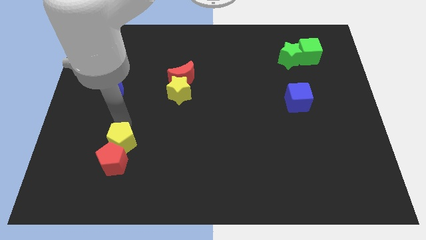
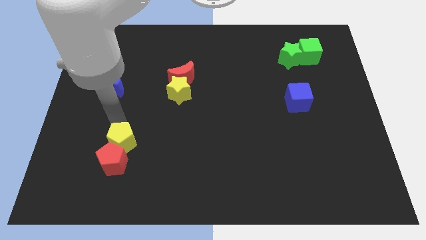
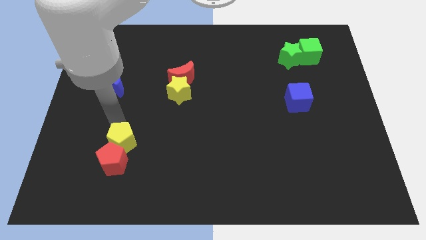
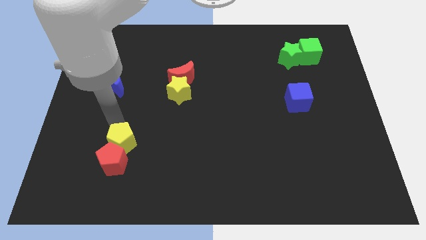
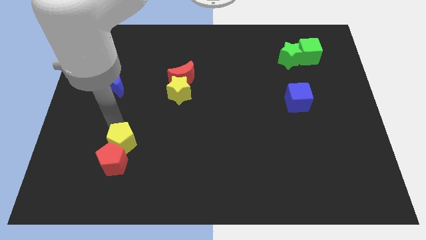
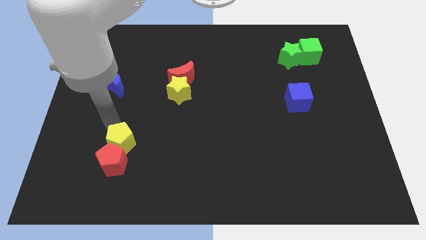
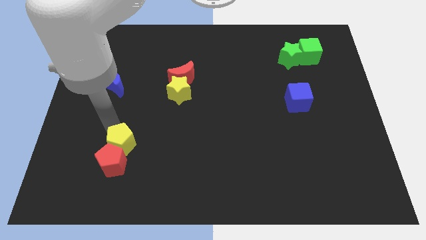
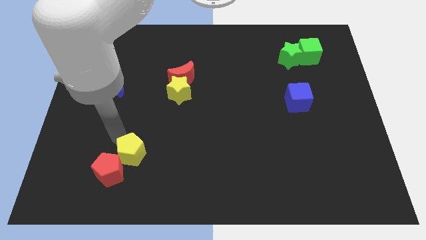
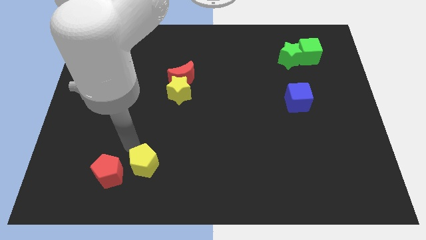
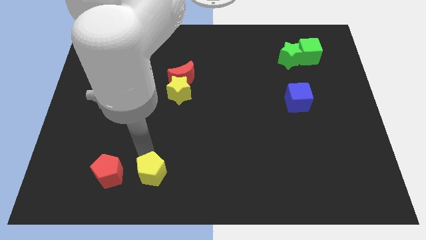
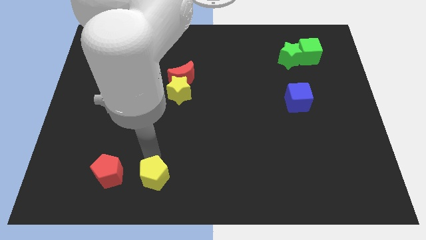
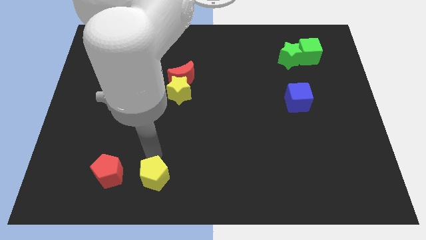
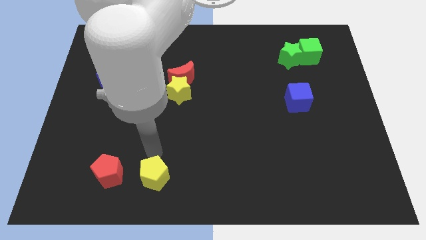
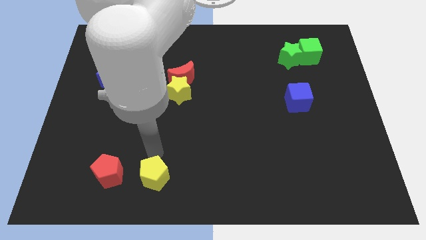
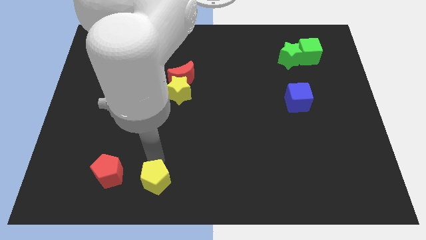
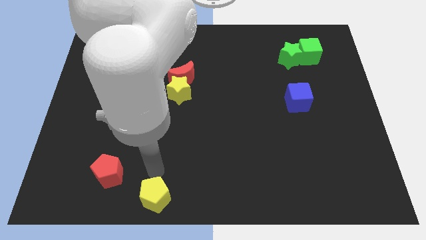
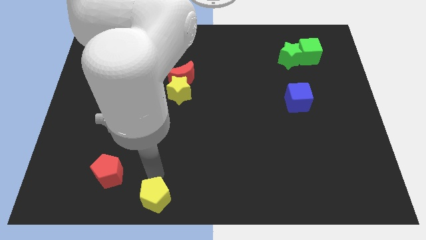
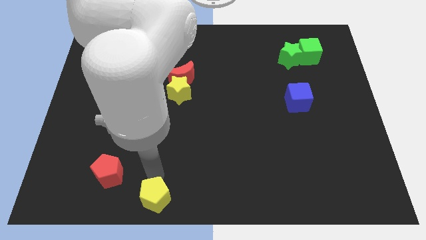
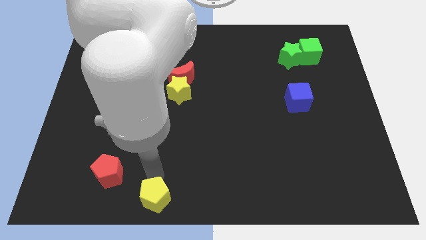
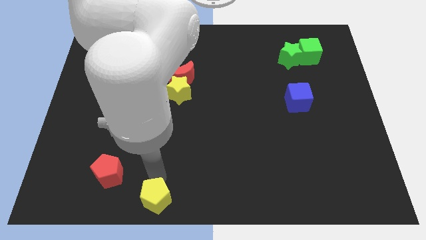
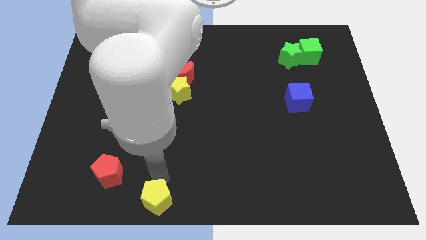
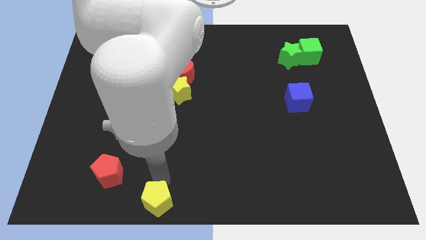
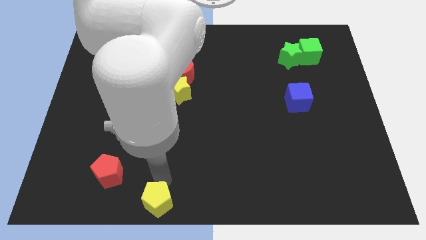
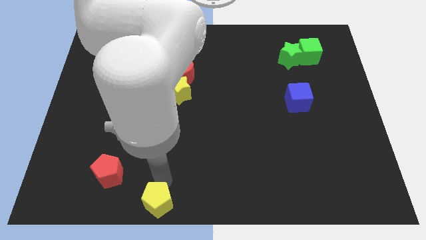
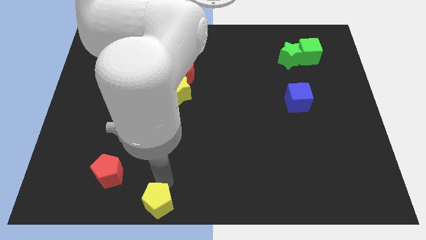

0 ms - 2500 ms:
move the yellow pentagon to the bottom

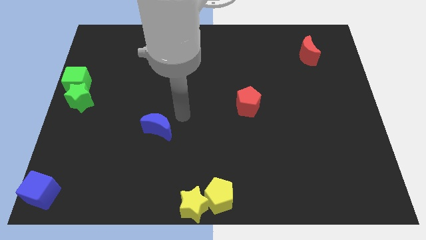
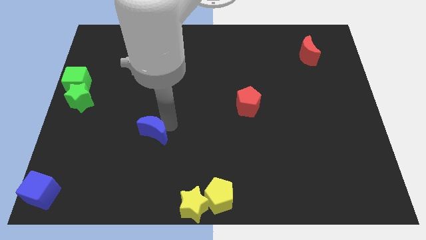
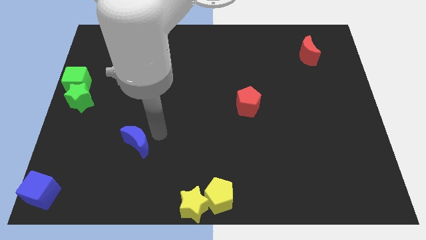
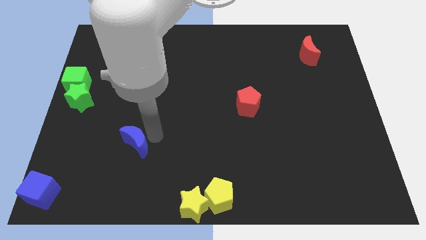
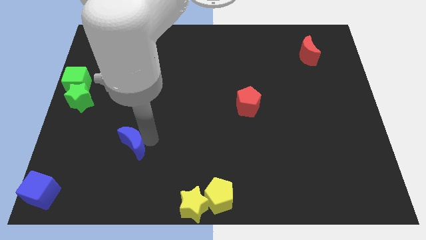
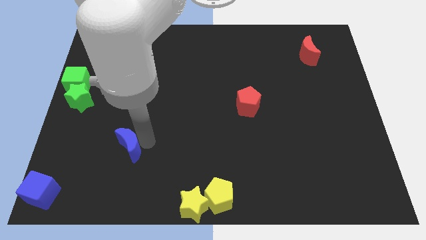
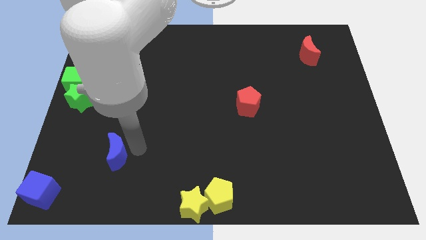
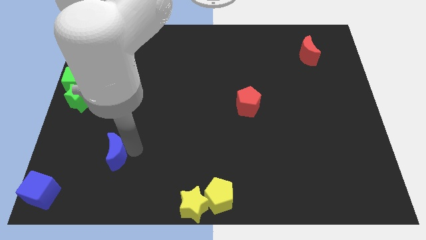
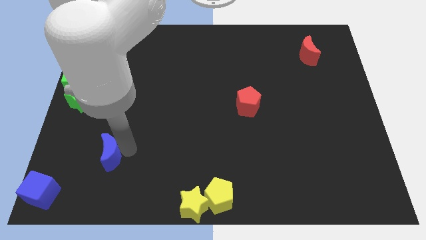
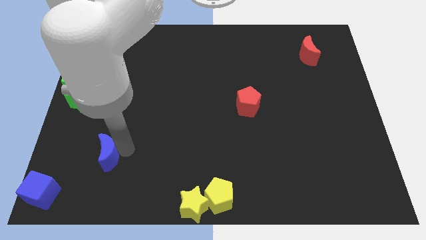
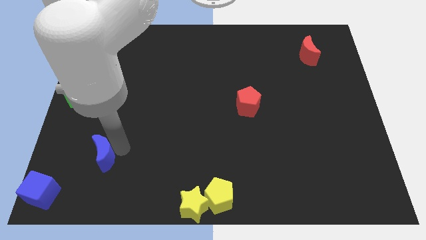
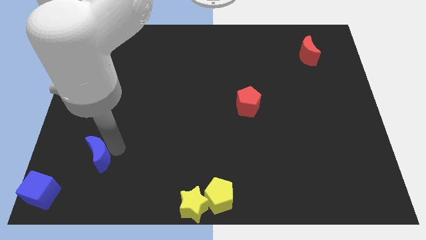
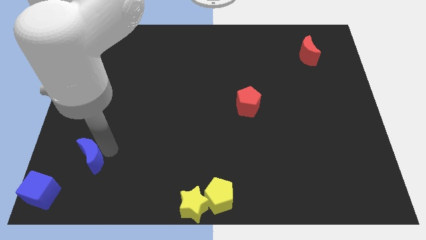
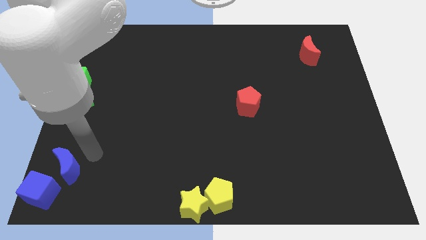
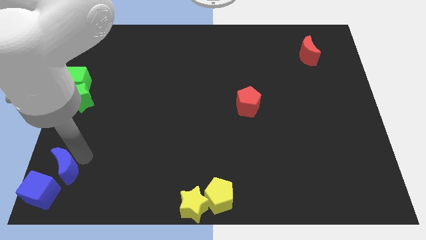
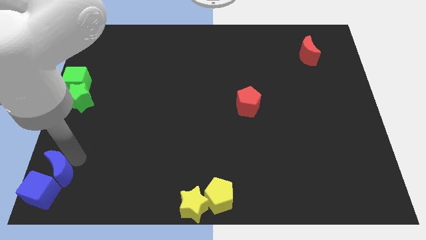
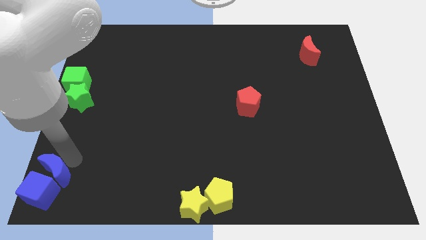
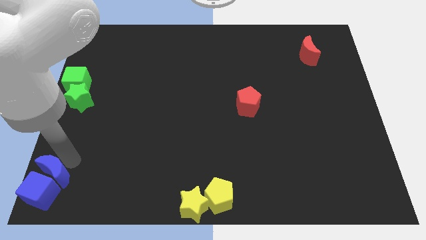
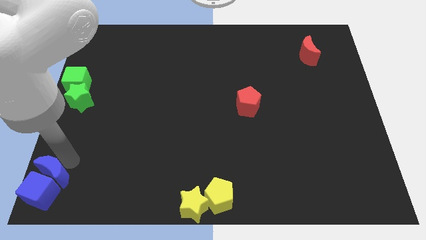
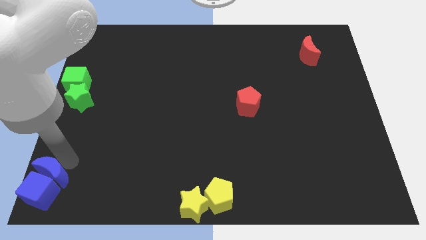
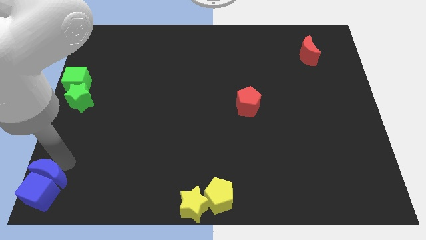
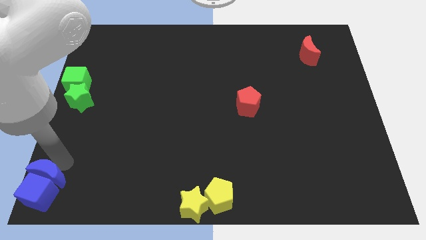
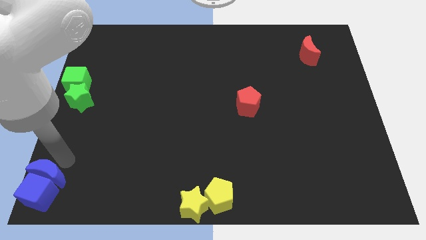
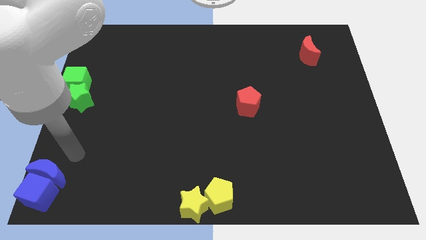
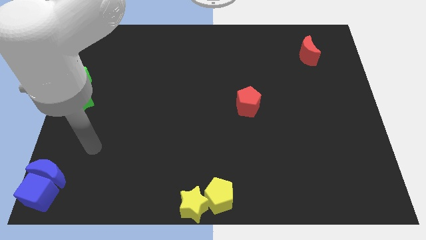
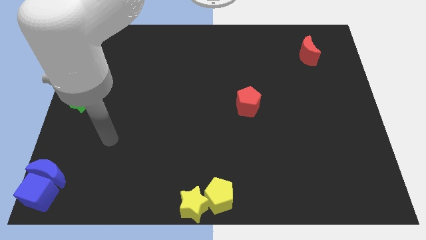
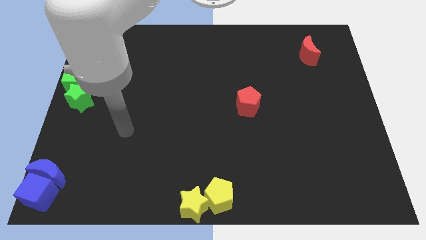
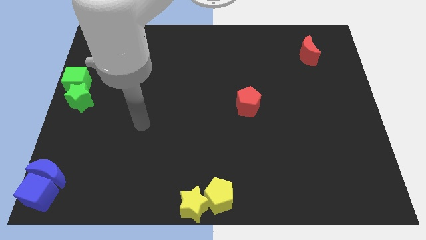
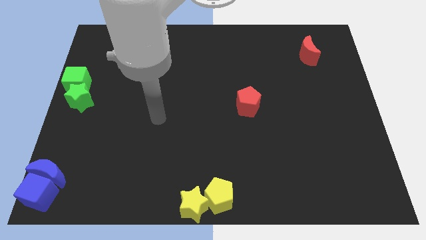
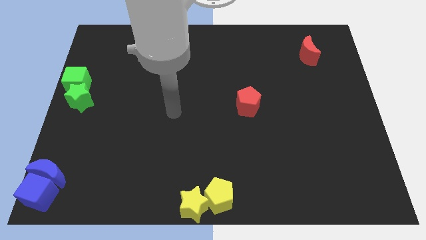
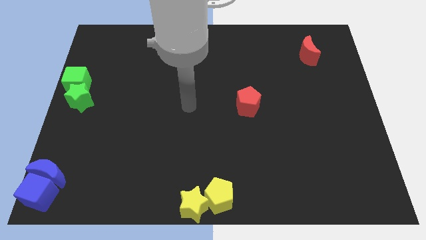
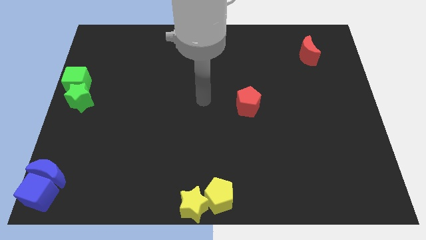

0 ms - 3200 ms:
group up the blue blocks at the bottom left corner

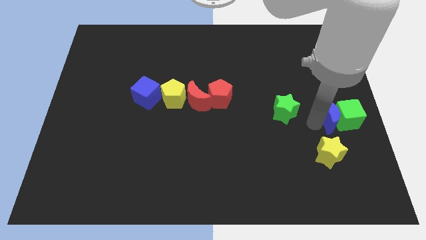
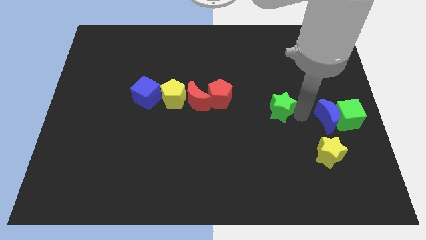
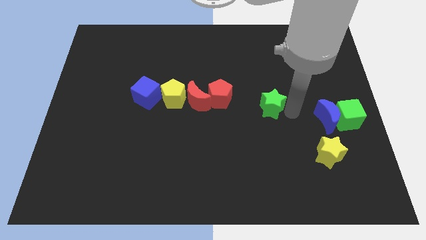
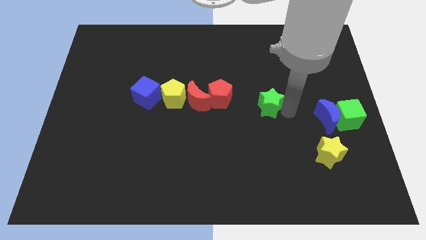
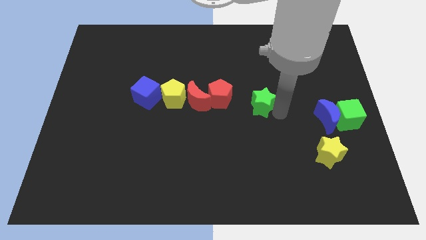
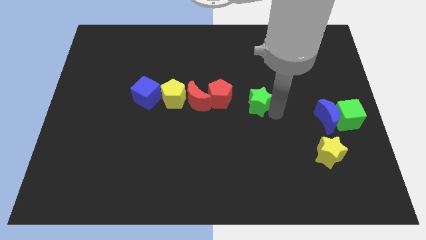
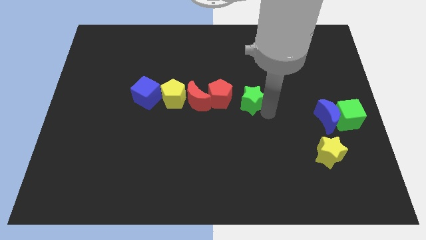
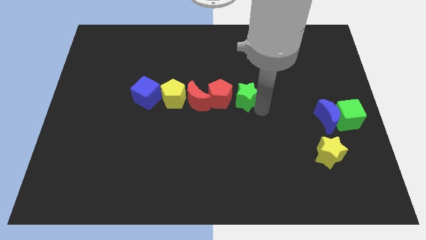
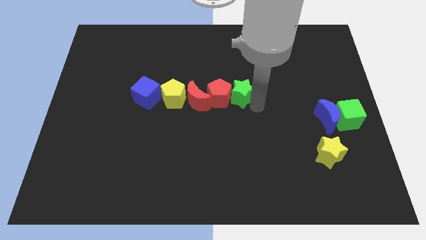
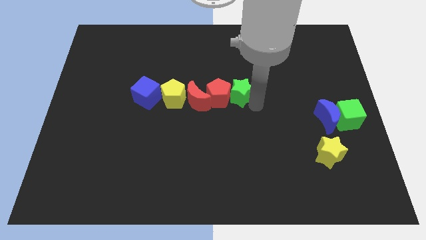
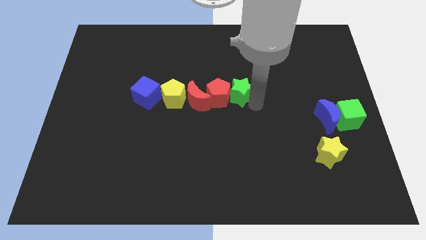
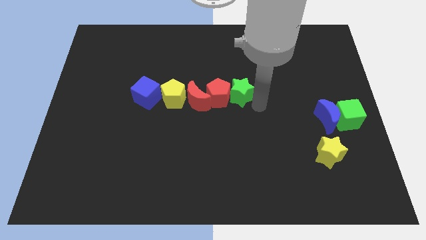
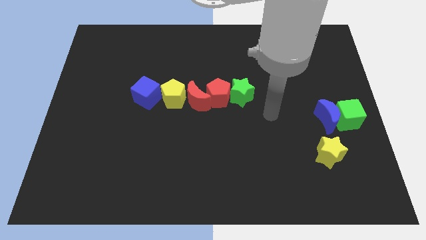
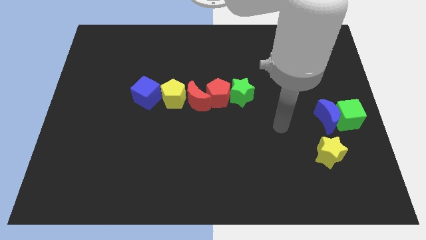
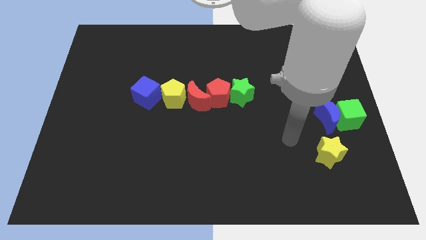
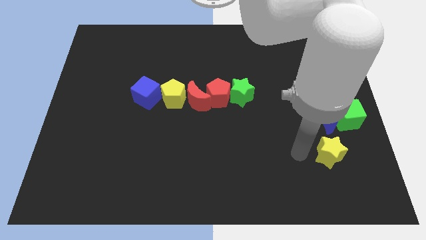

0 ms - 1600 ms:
place the green star right to the red pentagon

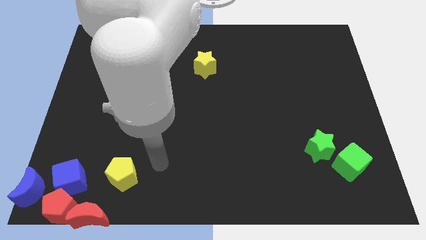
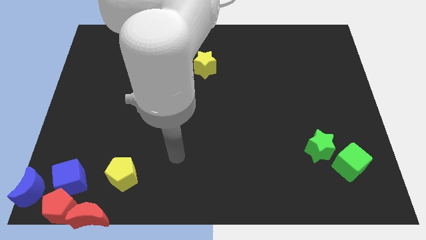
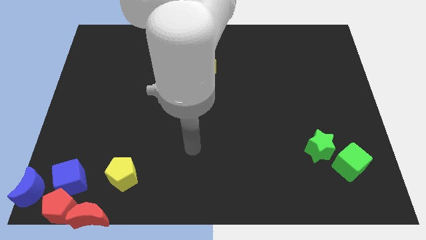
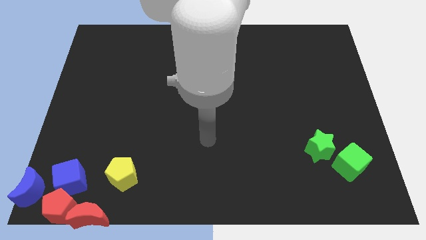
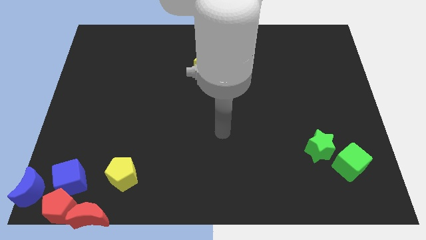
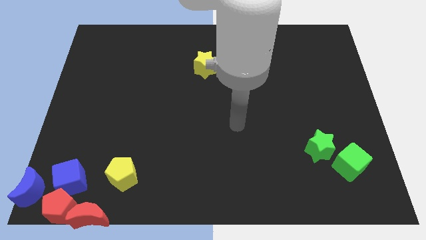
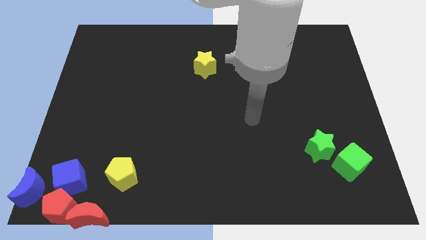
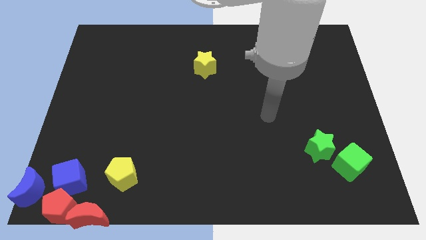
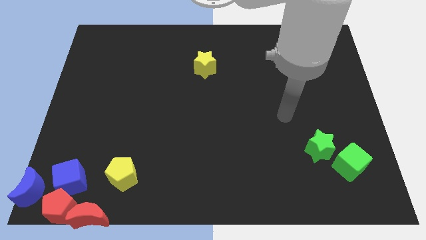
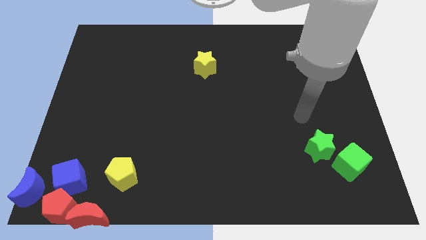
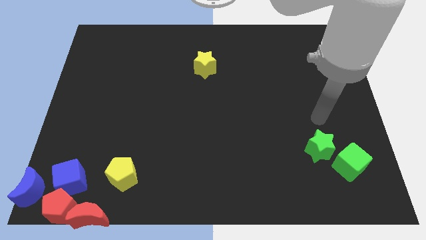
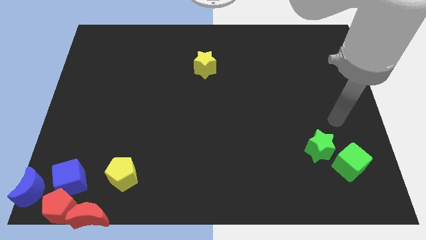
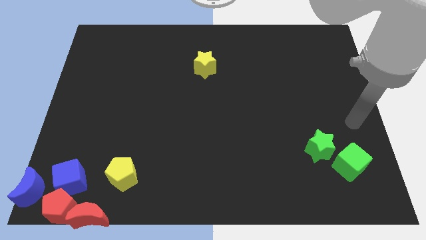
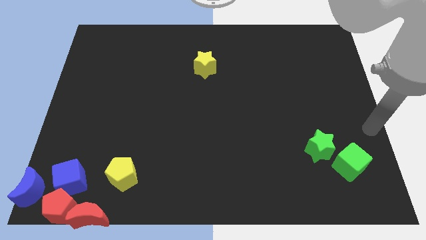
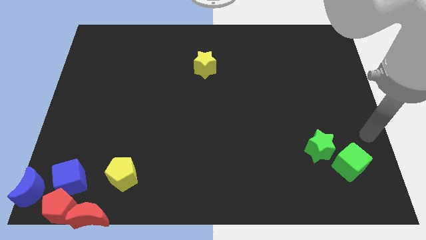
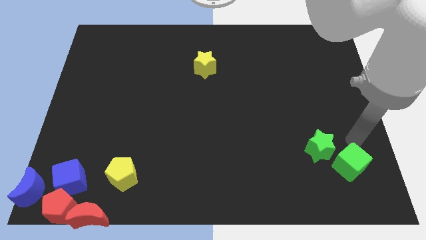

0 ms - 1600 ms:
point your arm at the top side of the green cube
